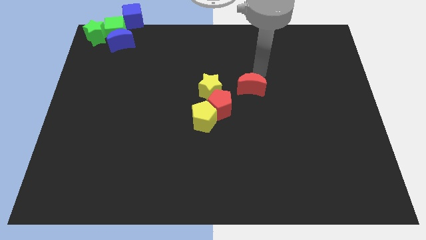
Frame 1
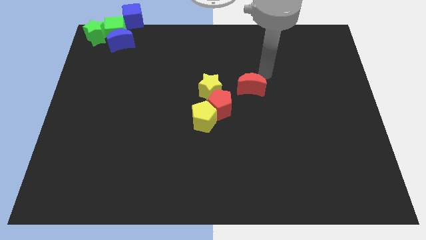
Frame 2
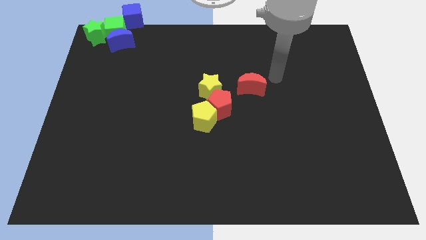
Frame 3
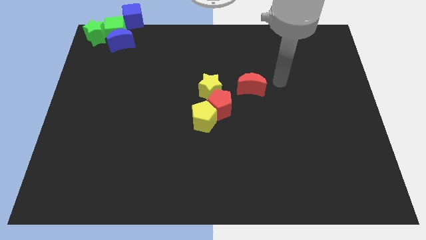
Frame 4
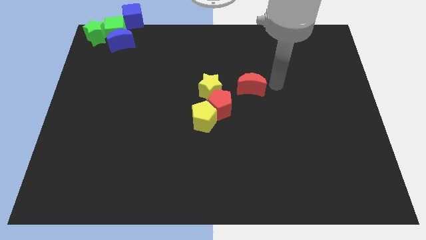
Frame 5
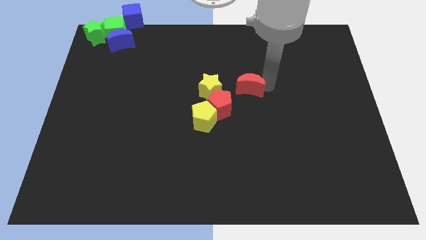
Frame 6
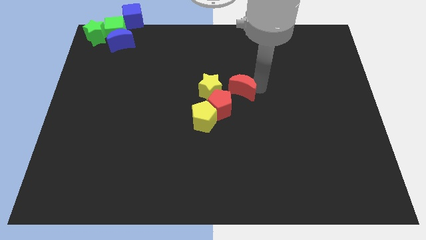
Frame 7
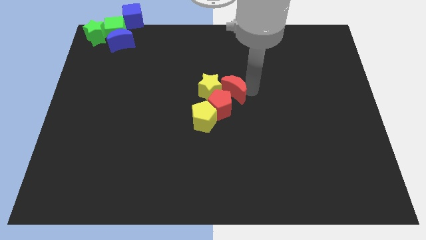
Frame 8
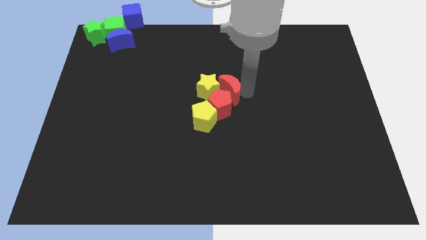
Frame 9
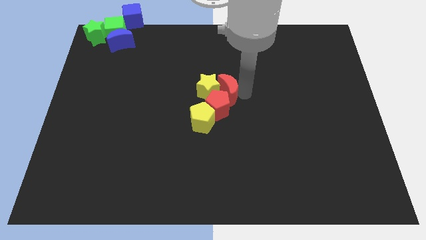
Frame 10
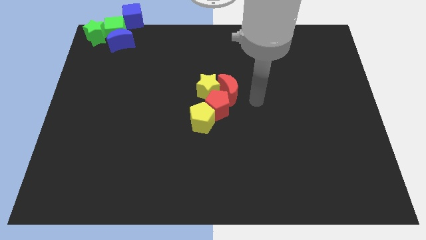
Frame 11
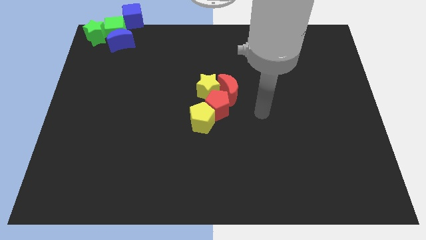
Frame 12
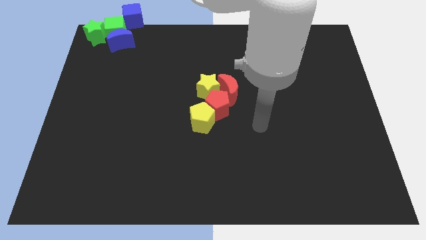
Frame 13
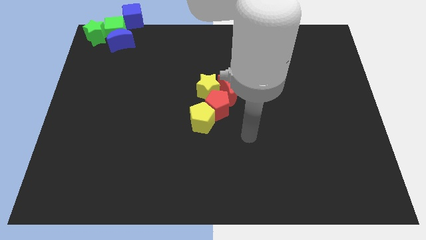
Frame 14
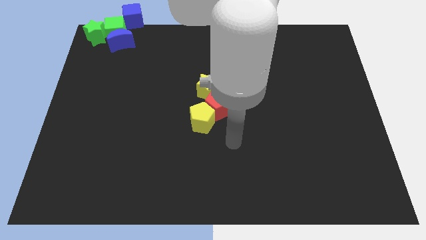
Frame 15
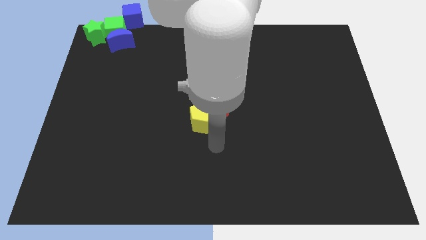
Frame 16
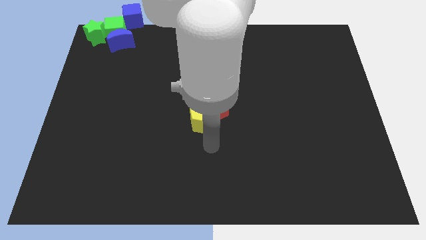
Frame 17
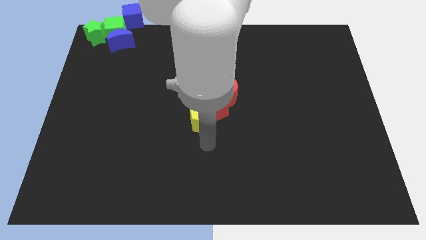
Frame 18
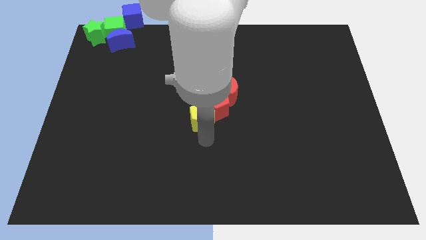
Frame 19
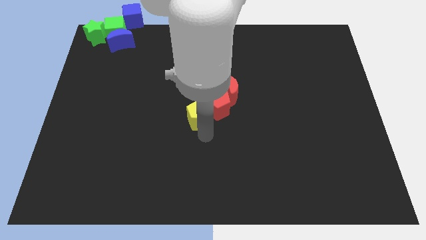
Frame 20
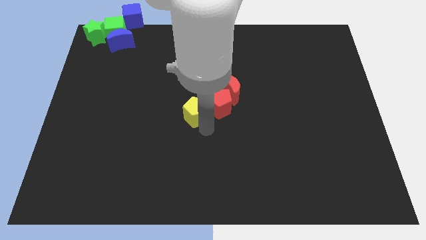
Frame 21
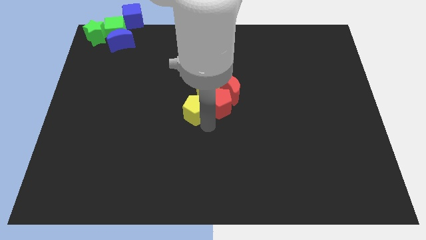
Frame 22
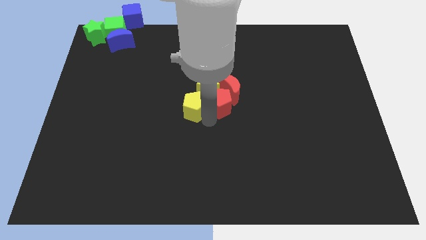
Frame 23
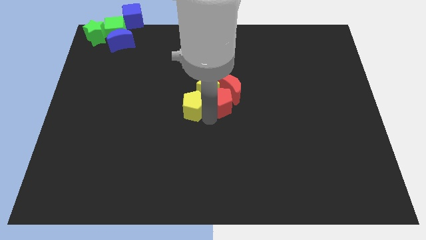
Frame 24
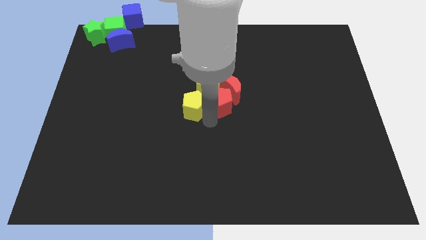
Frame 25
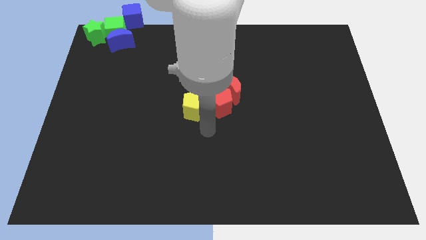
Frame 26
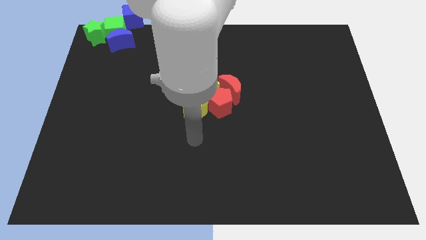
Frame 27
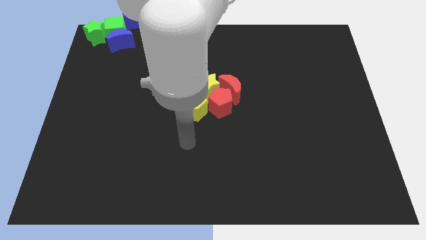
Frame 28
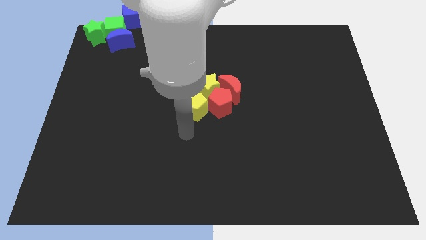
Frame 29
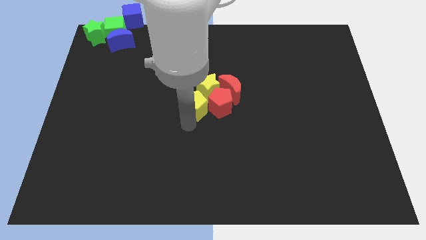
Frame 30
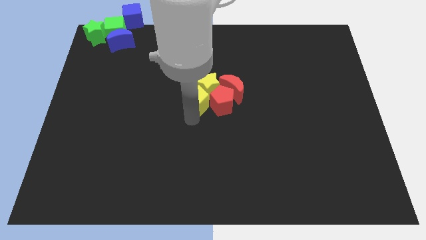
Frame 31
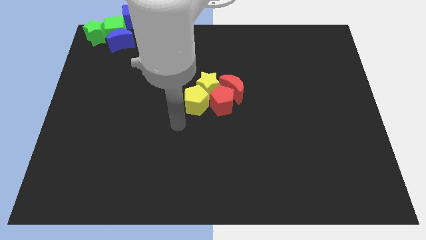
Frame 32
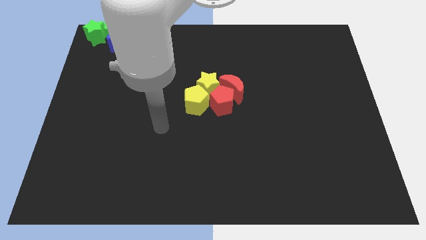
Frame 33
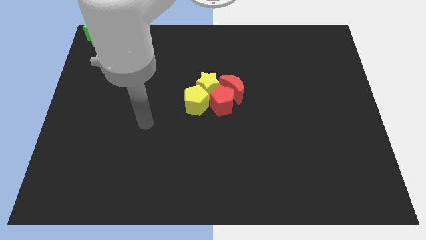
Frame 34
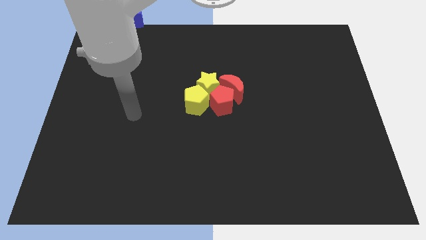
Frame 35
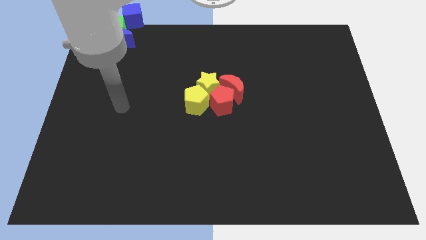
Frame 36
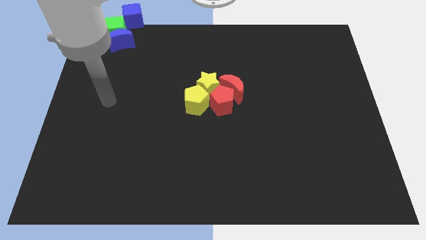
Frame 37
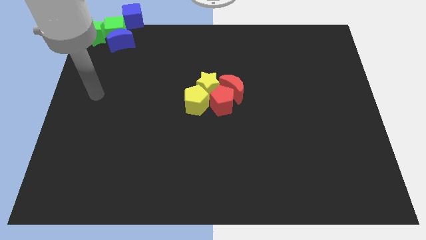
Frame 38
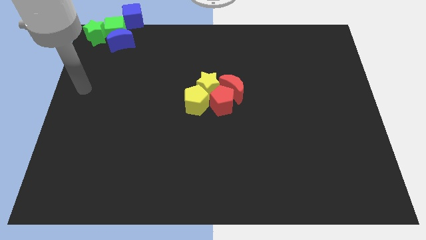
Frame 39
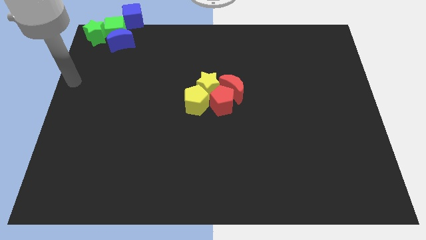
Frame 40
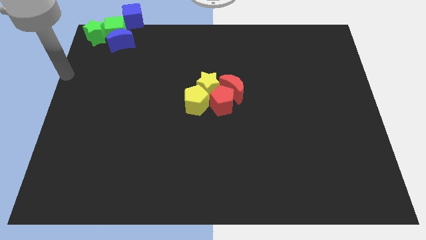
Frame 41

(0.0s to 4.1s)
place all the yellow and red blocks at the center of the board

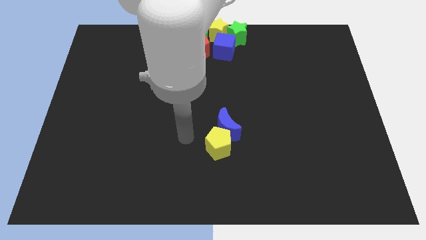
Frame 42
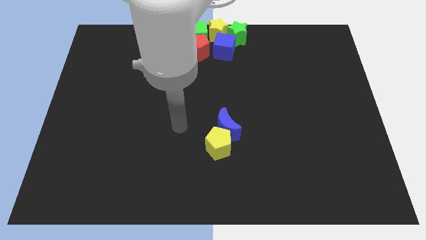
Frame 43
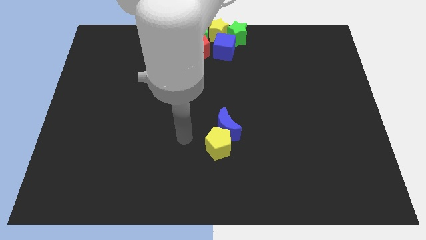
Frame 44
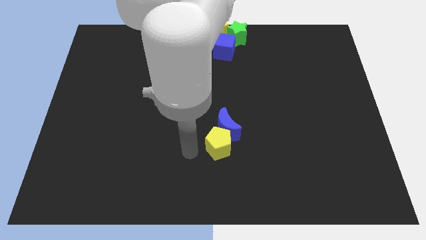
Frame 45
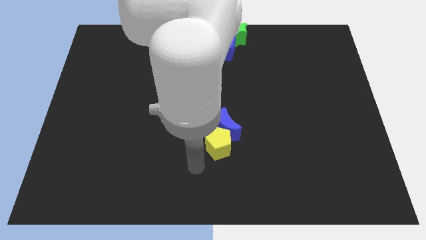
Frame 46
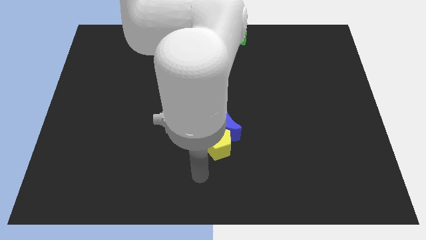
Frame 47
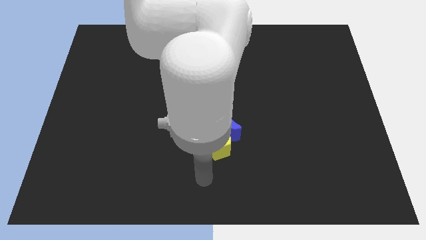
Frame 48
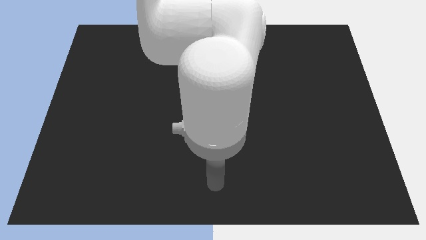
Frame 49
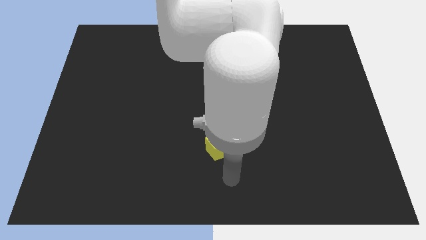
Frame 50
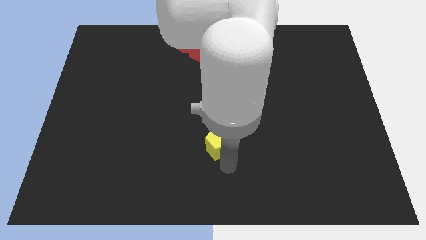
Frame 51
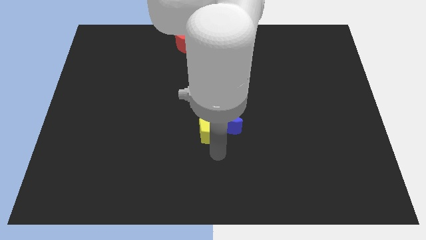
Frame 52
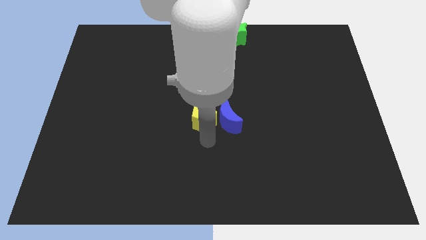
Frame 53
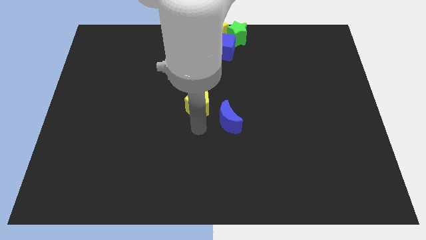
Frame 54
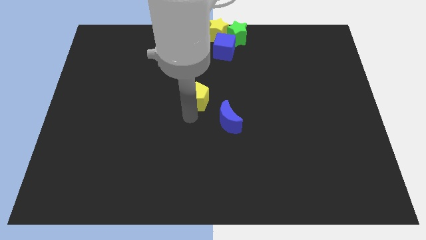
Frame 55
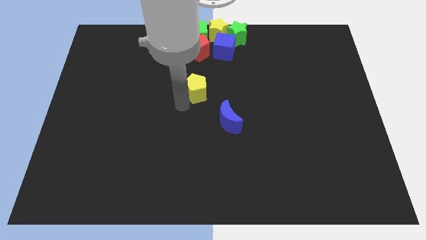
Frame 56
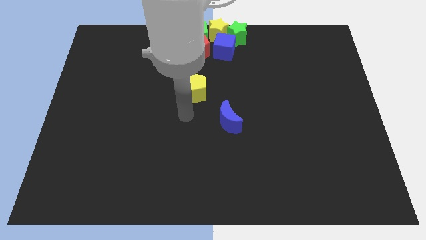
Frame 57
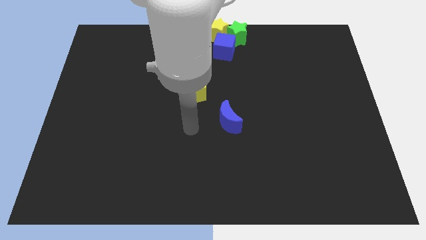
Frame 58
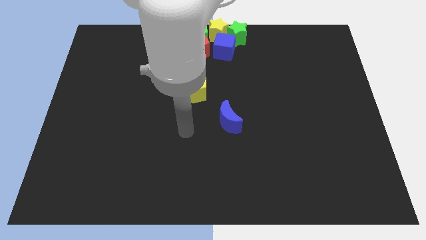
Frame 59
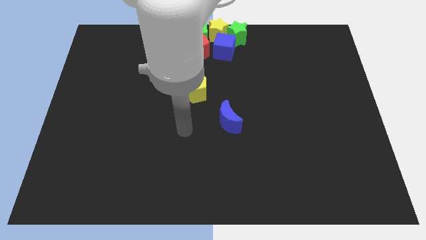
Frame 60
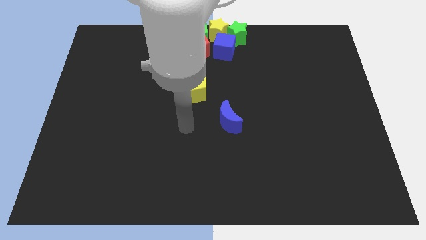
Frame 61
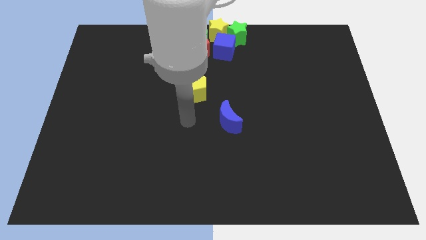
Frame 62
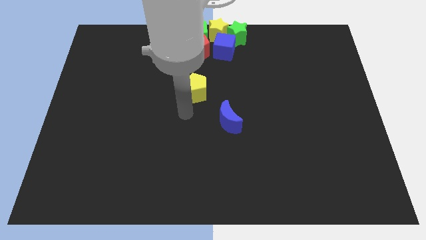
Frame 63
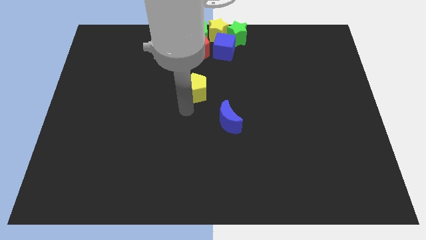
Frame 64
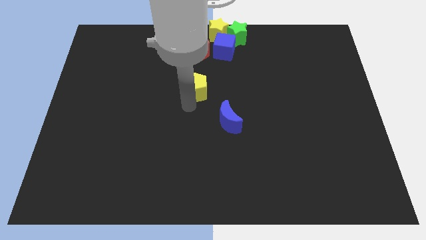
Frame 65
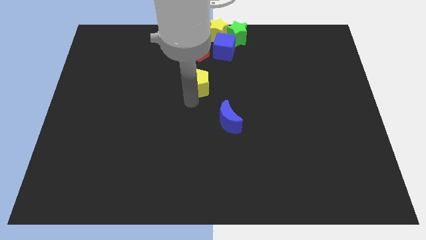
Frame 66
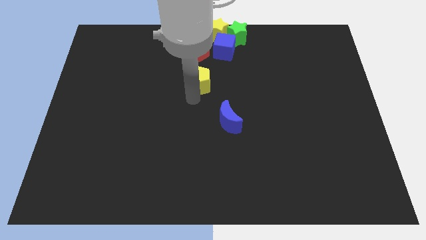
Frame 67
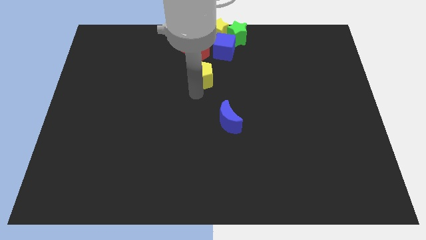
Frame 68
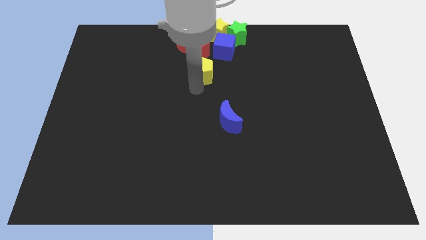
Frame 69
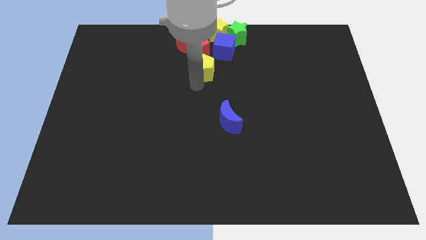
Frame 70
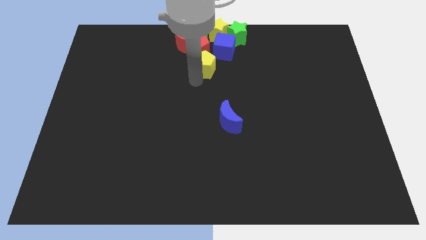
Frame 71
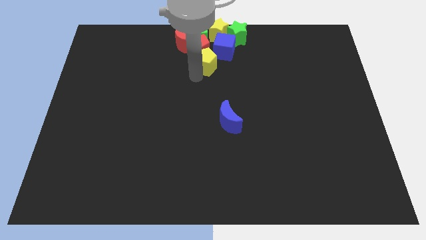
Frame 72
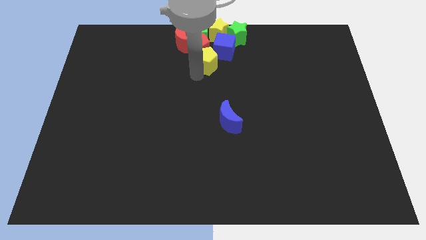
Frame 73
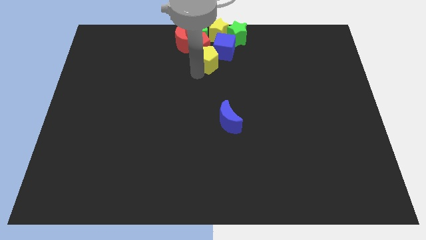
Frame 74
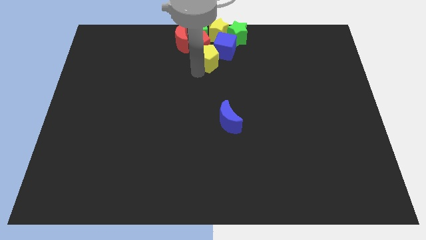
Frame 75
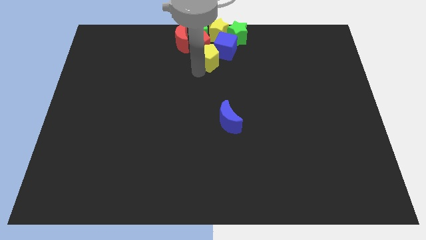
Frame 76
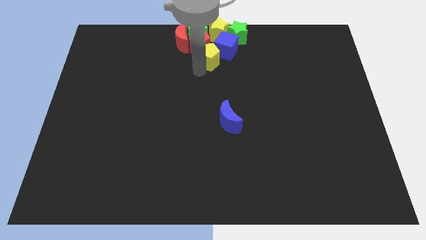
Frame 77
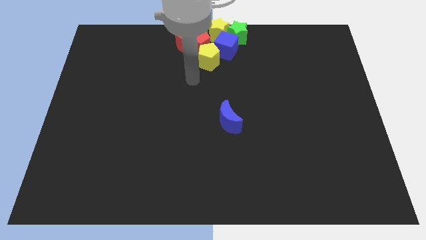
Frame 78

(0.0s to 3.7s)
push the yellow pentagon to the group of blocks

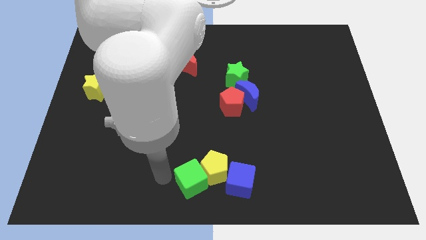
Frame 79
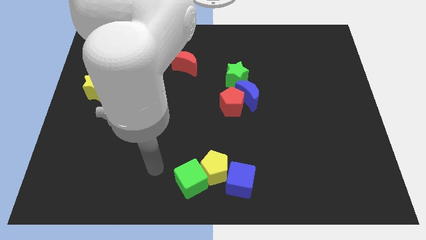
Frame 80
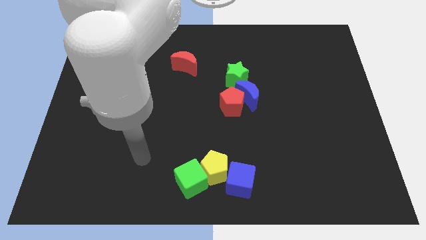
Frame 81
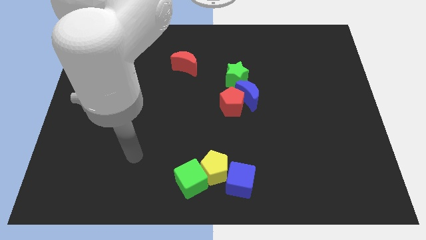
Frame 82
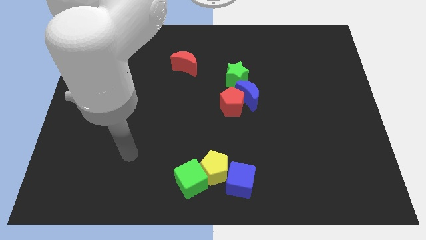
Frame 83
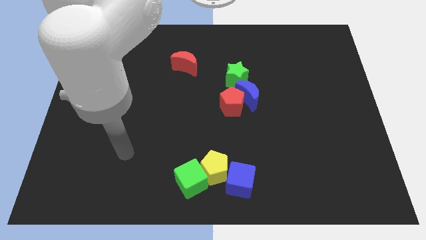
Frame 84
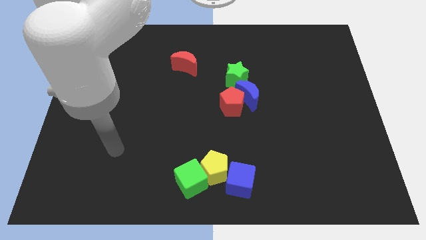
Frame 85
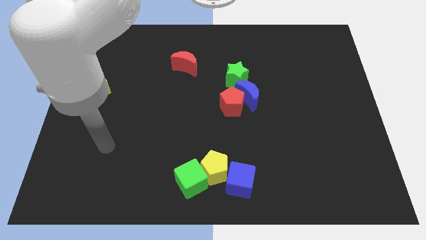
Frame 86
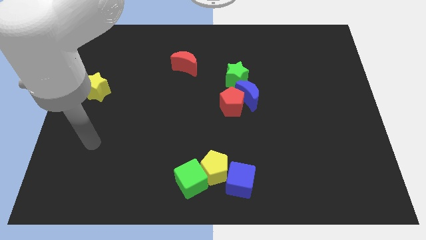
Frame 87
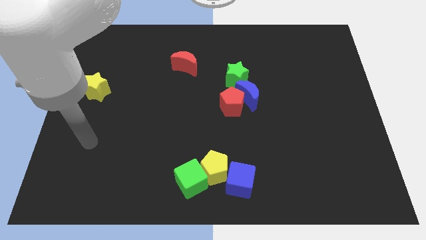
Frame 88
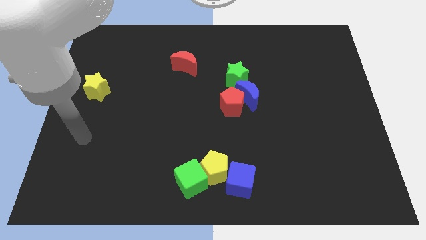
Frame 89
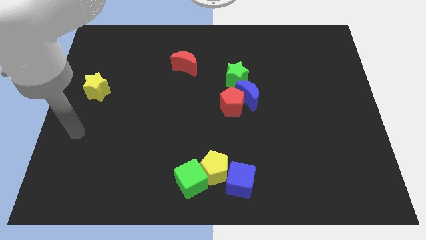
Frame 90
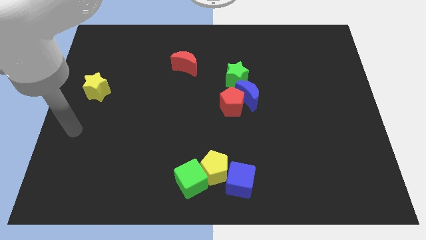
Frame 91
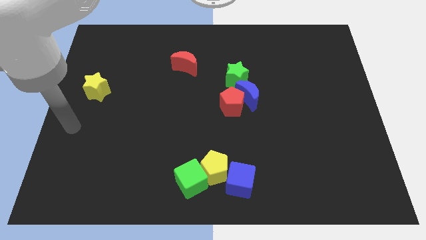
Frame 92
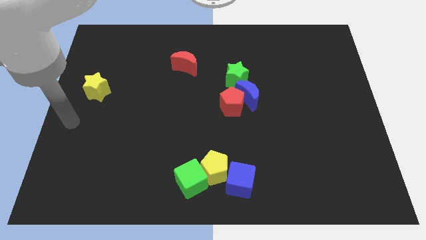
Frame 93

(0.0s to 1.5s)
move your arm away from the green cube
